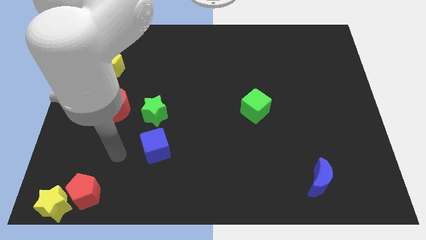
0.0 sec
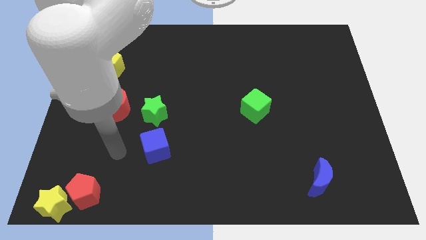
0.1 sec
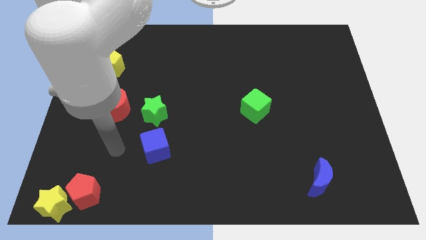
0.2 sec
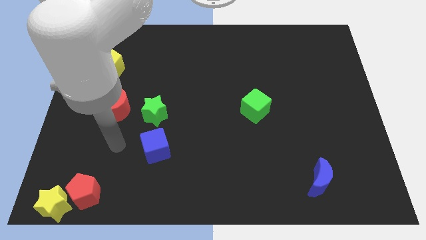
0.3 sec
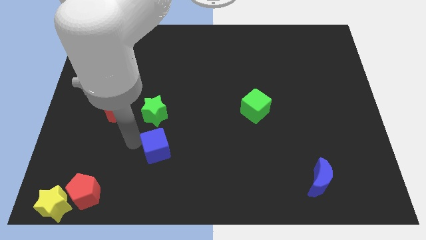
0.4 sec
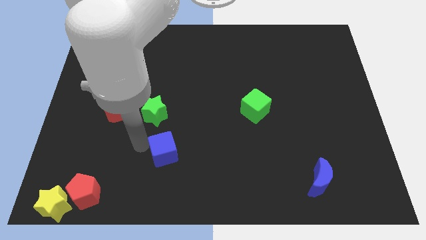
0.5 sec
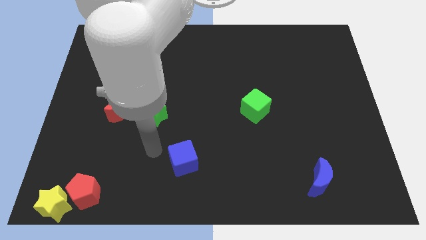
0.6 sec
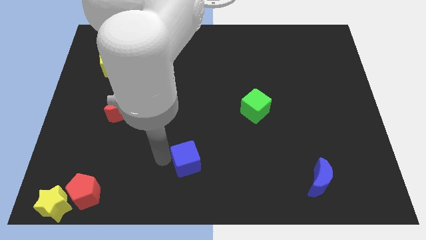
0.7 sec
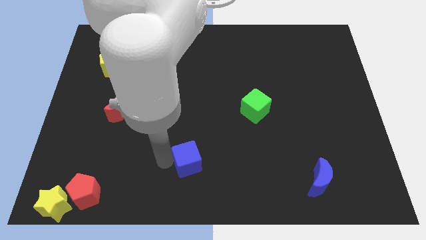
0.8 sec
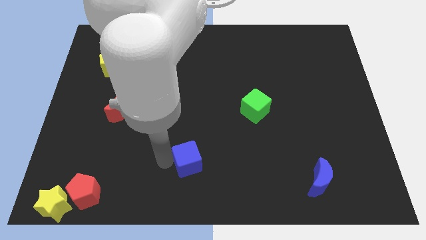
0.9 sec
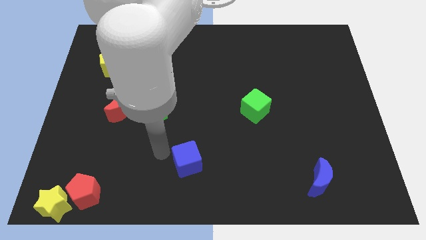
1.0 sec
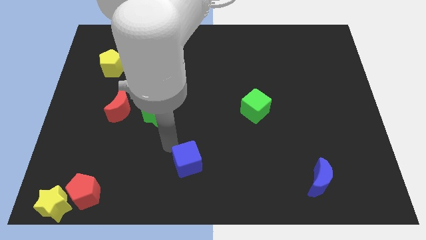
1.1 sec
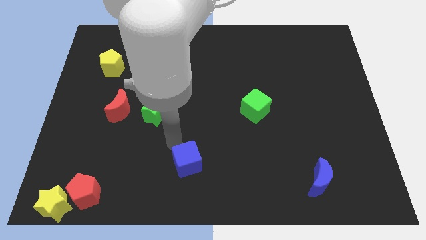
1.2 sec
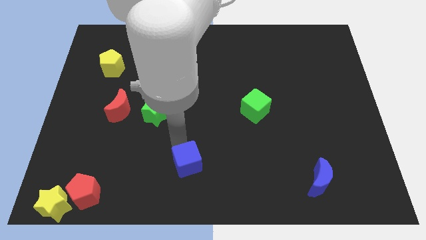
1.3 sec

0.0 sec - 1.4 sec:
drag the blue cube to the bottom center

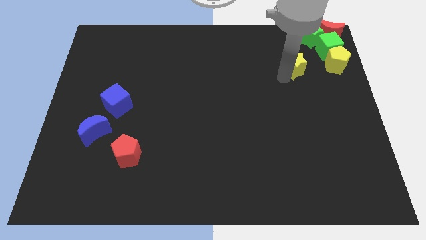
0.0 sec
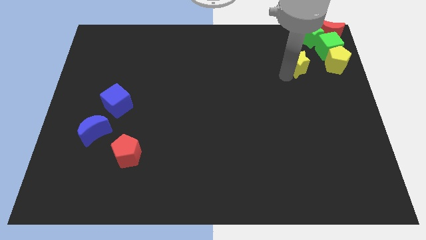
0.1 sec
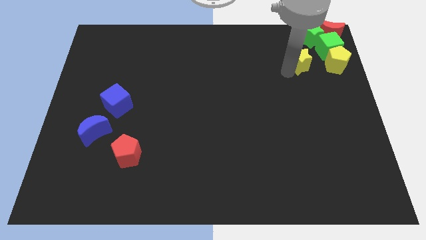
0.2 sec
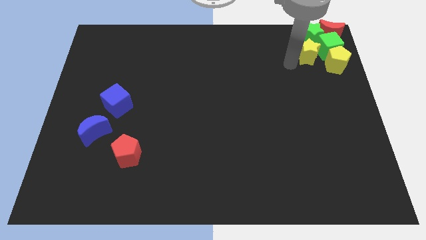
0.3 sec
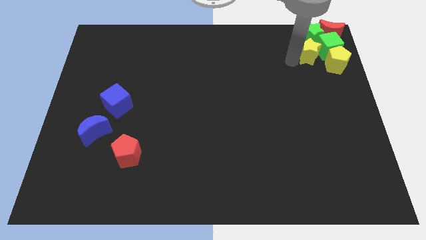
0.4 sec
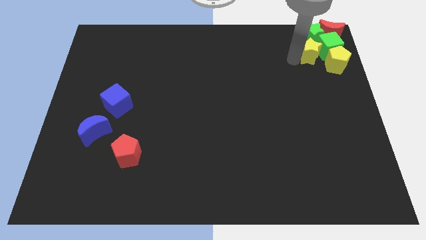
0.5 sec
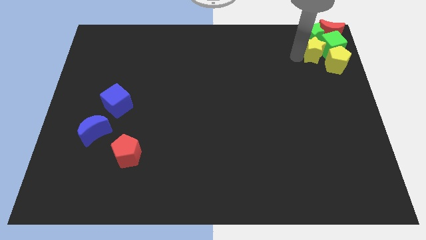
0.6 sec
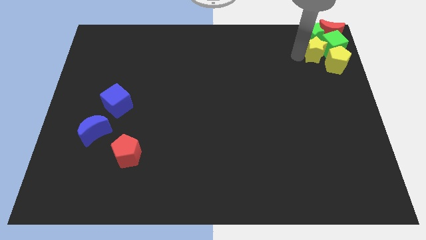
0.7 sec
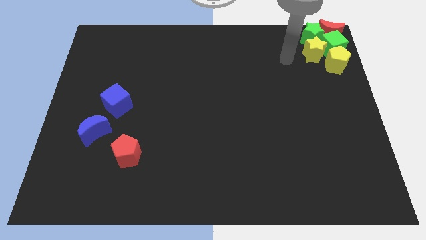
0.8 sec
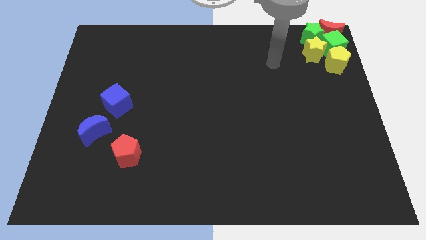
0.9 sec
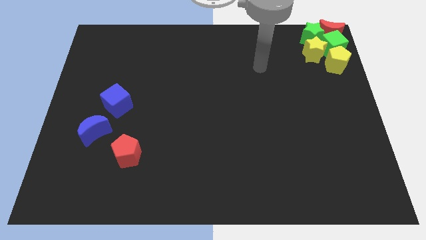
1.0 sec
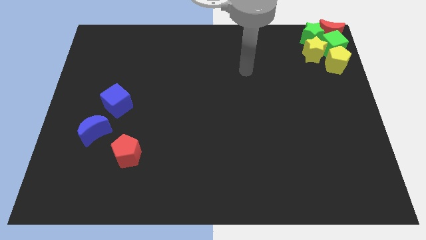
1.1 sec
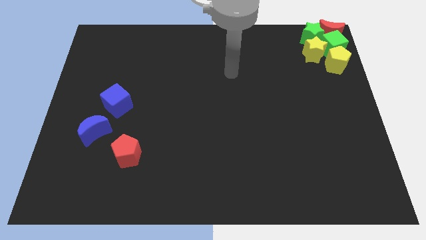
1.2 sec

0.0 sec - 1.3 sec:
move the yellow star close to the green cube

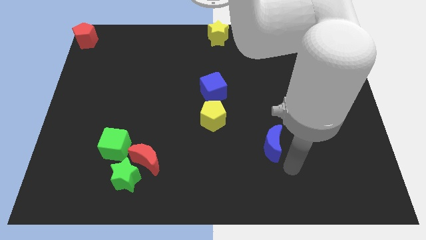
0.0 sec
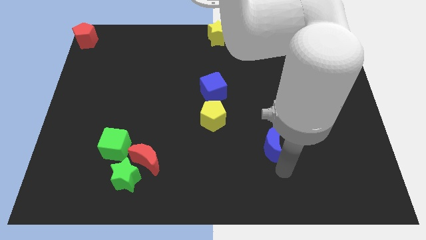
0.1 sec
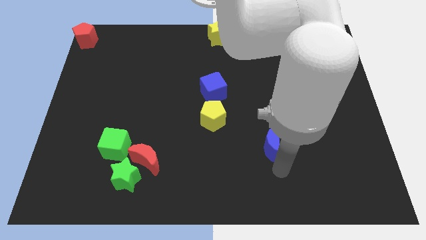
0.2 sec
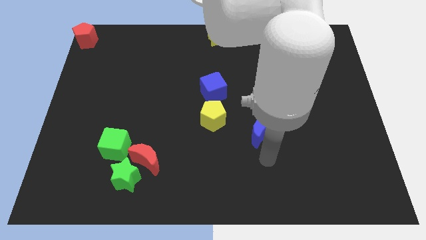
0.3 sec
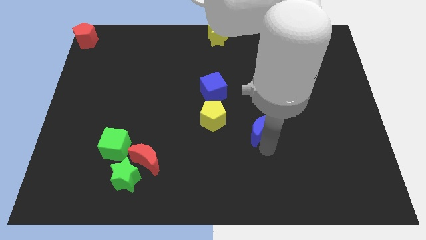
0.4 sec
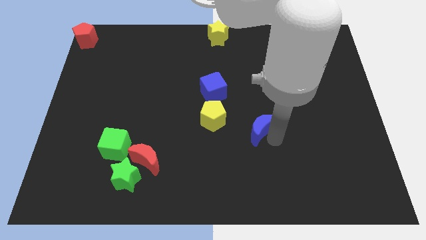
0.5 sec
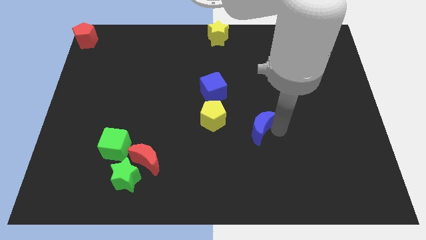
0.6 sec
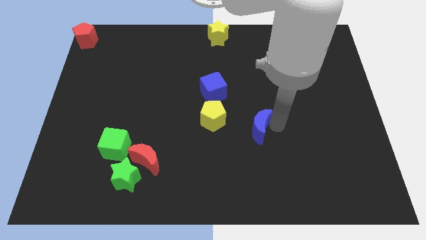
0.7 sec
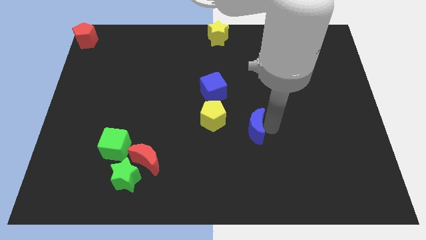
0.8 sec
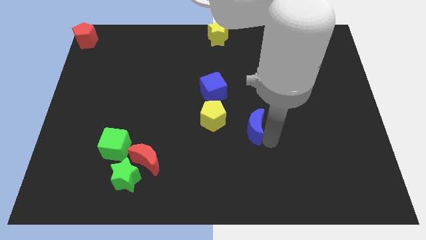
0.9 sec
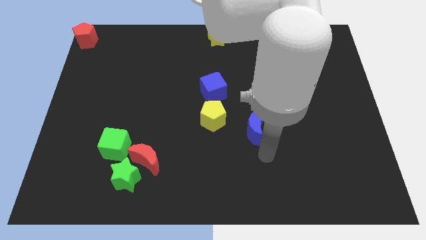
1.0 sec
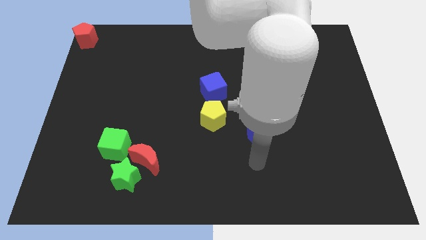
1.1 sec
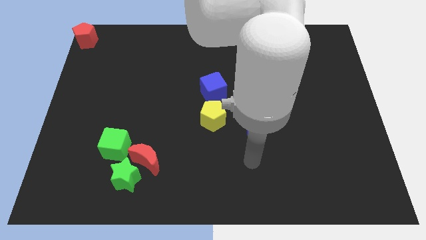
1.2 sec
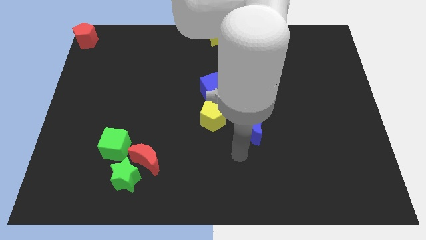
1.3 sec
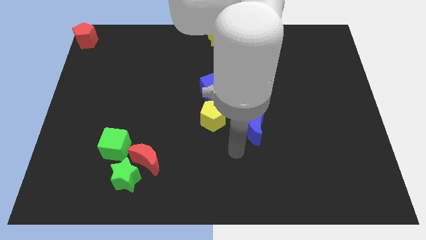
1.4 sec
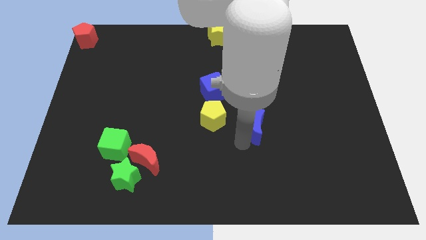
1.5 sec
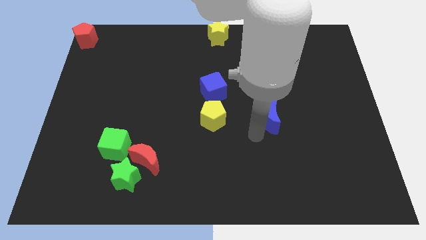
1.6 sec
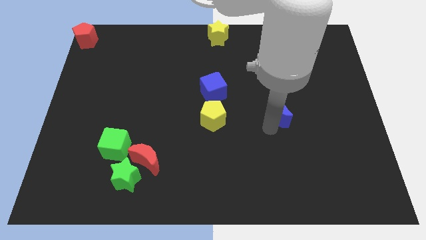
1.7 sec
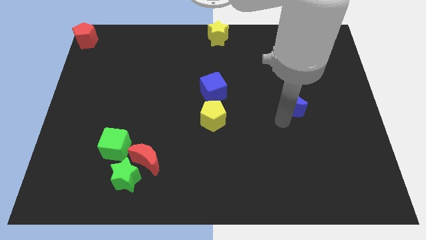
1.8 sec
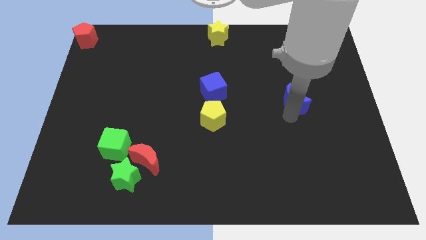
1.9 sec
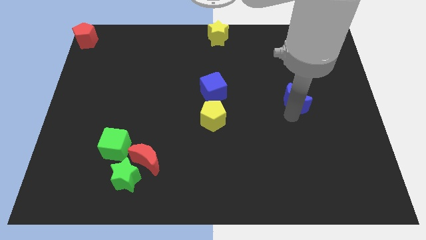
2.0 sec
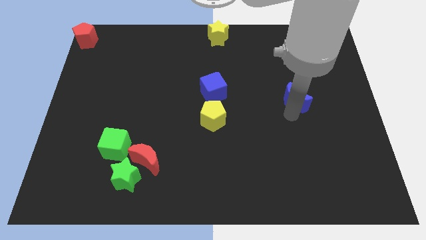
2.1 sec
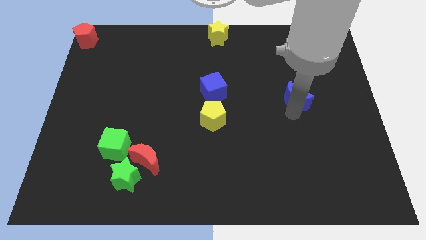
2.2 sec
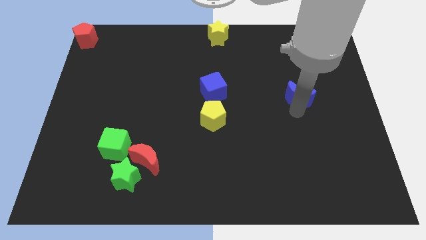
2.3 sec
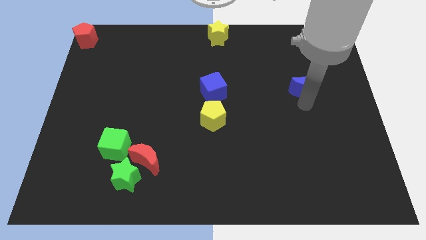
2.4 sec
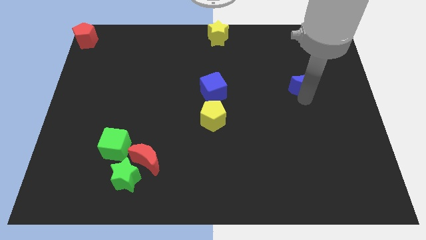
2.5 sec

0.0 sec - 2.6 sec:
push the blue crescent horizontal parallel to the blue cube

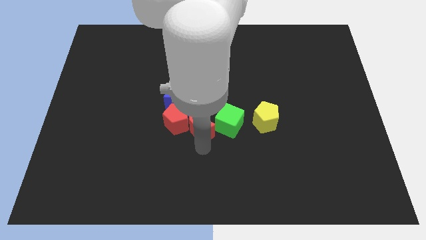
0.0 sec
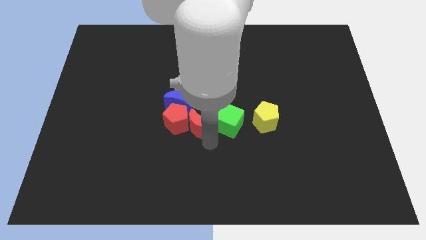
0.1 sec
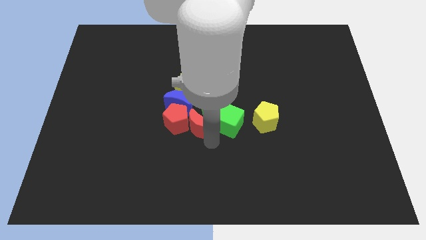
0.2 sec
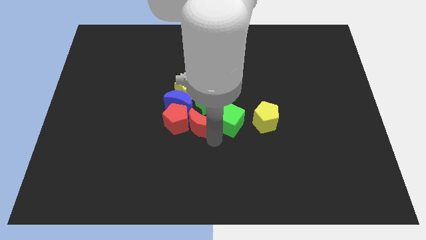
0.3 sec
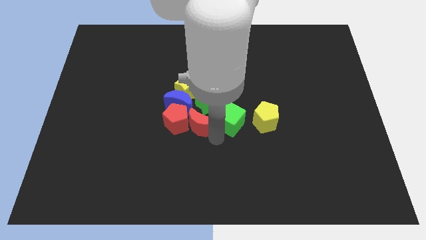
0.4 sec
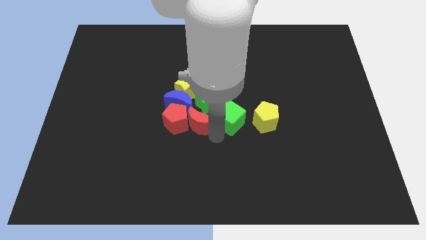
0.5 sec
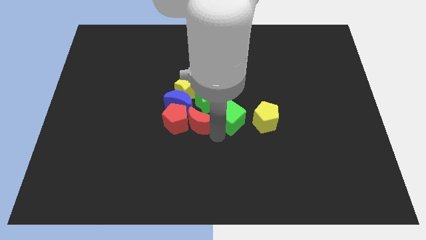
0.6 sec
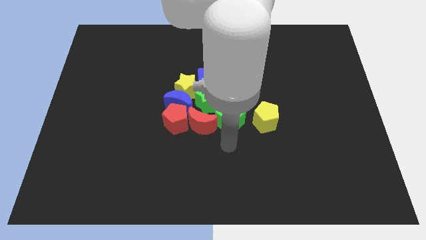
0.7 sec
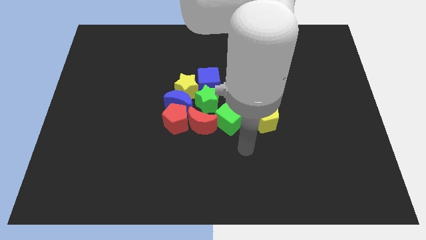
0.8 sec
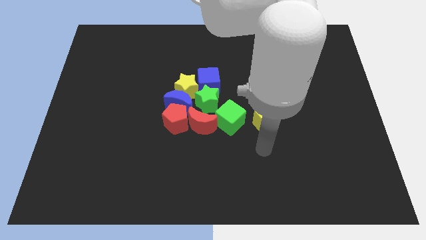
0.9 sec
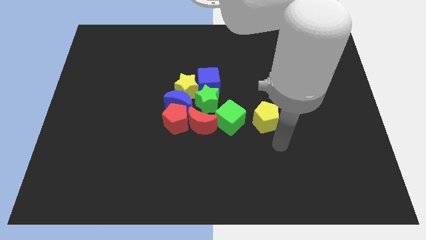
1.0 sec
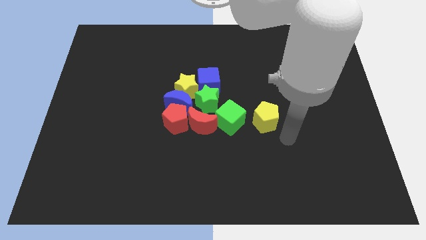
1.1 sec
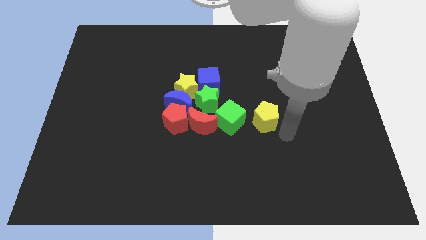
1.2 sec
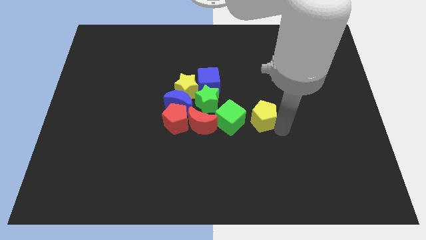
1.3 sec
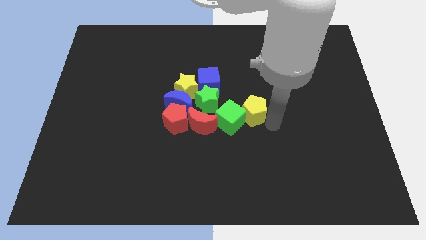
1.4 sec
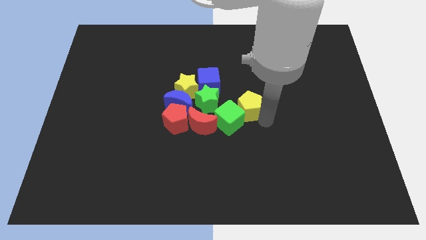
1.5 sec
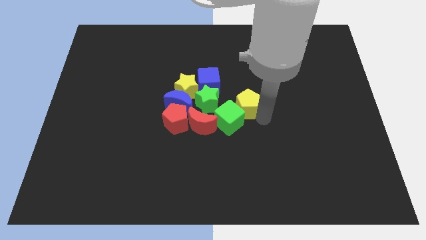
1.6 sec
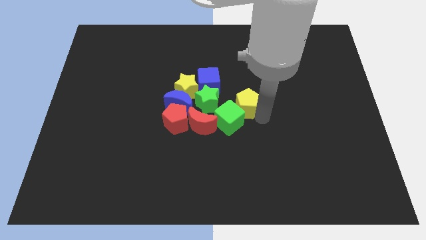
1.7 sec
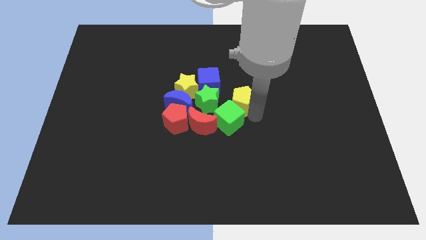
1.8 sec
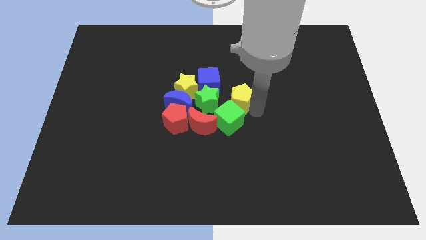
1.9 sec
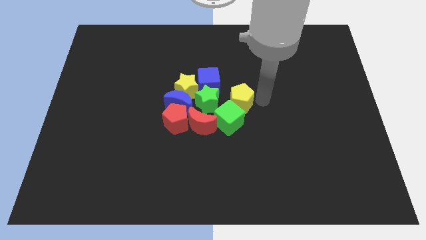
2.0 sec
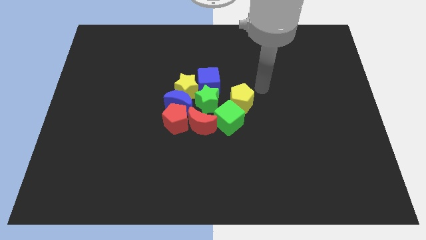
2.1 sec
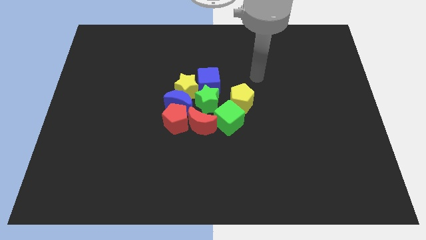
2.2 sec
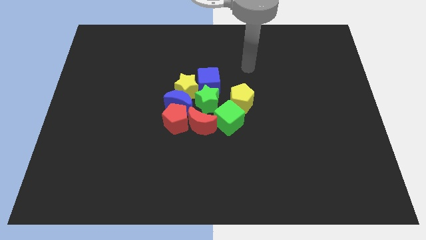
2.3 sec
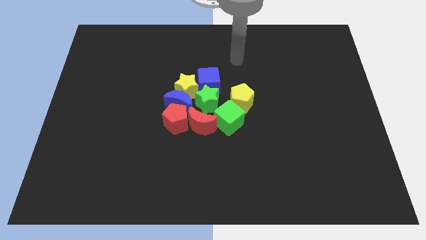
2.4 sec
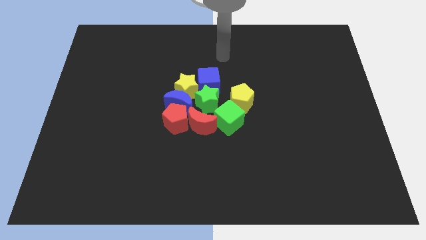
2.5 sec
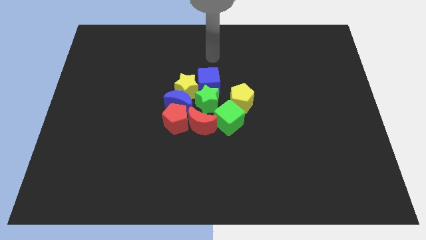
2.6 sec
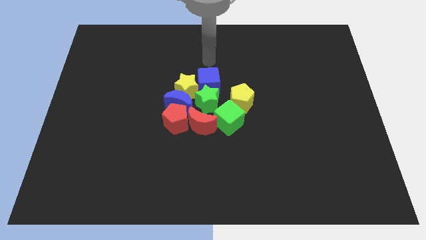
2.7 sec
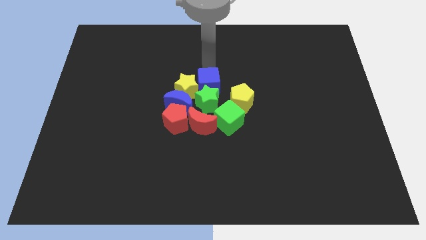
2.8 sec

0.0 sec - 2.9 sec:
move your arm close to the blue cube

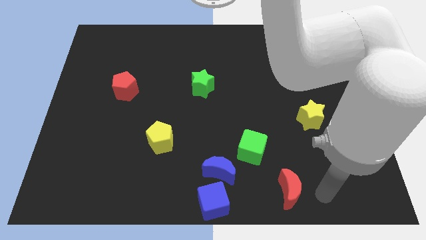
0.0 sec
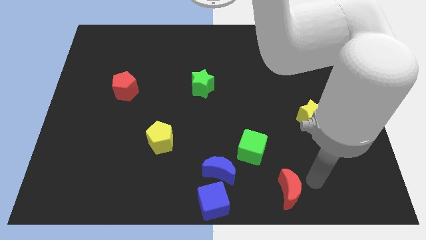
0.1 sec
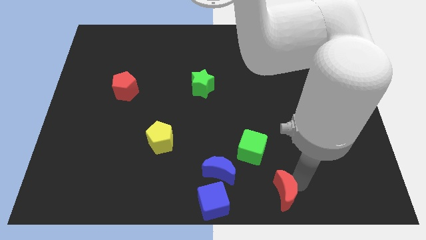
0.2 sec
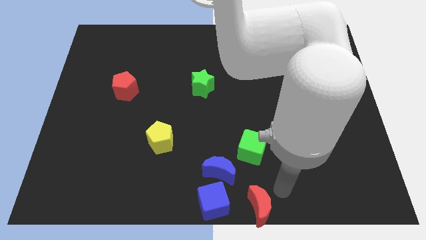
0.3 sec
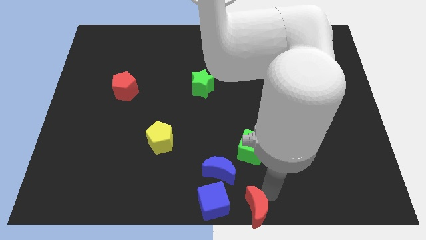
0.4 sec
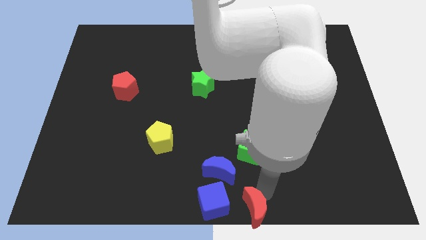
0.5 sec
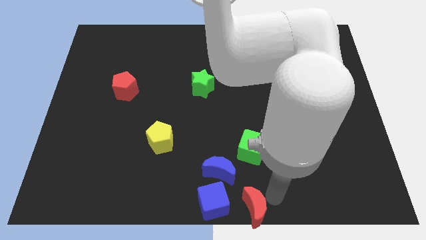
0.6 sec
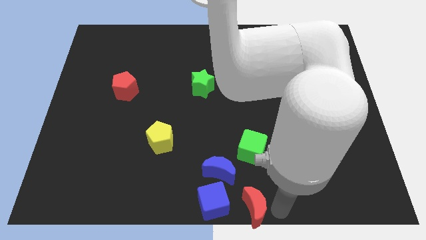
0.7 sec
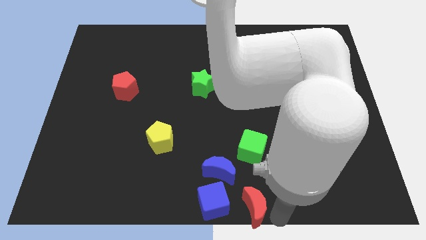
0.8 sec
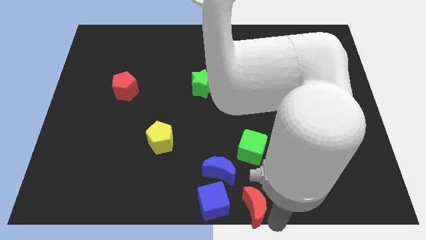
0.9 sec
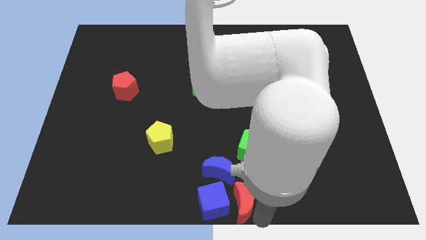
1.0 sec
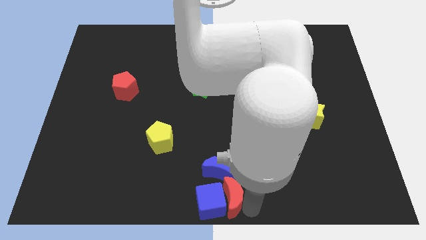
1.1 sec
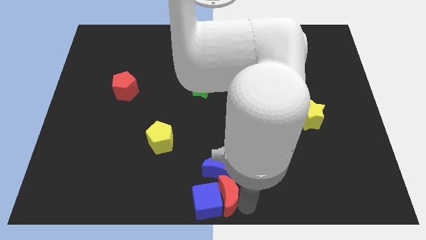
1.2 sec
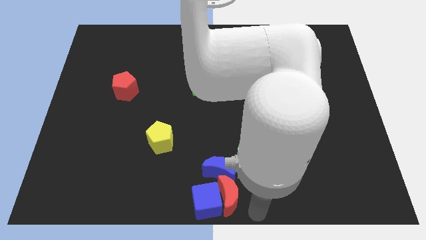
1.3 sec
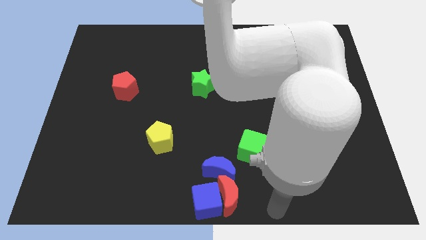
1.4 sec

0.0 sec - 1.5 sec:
push red crescent in to blue cube
